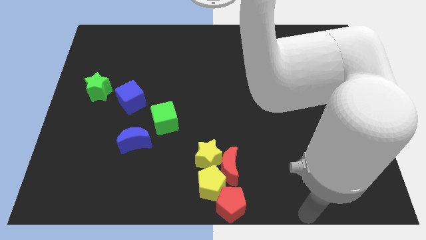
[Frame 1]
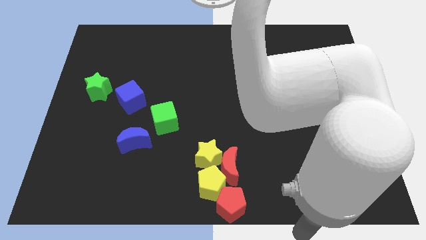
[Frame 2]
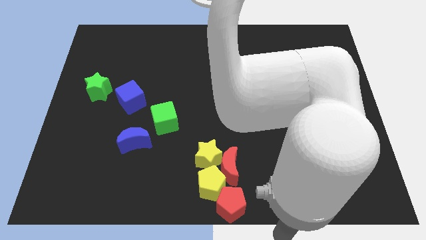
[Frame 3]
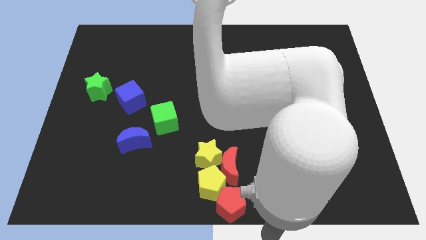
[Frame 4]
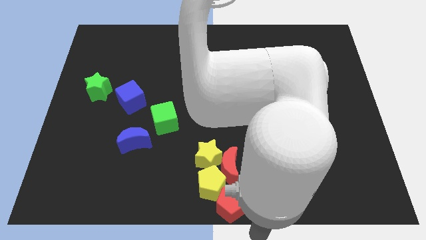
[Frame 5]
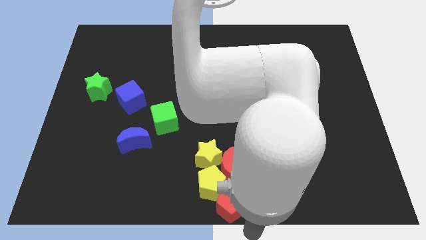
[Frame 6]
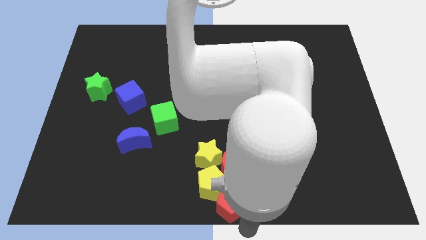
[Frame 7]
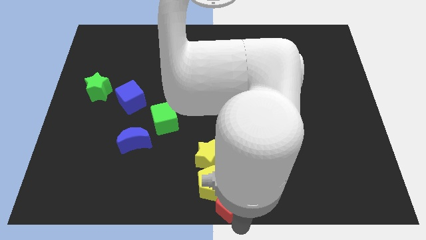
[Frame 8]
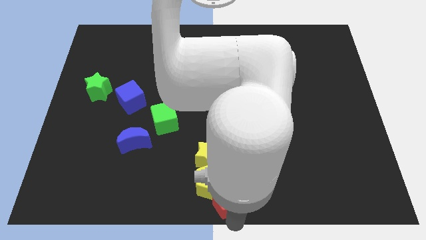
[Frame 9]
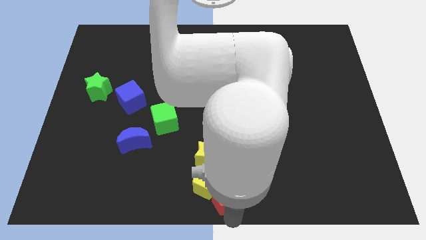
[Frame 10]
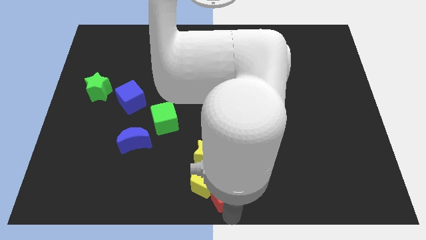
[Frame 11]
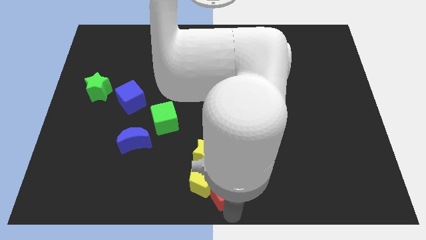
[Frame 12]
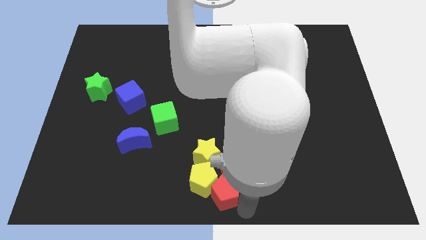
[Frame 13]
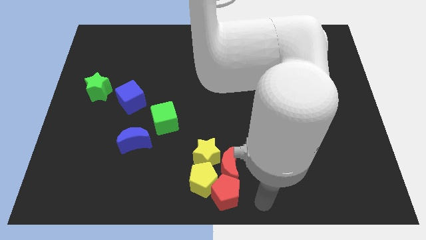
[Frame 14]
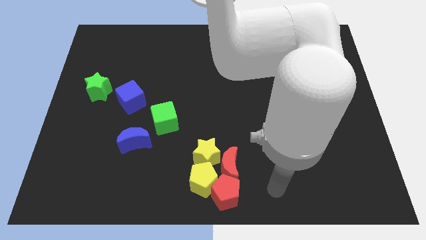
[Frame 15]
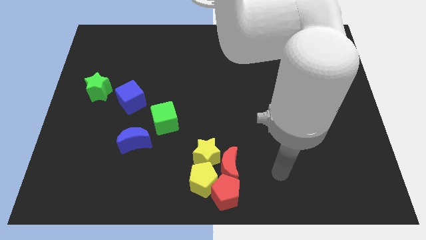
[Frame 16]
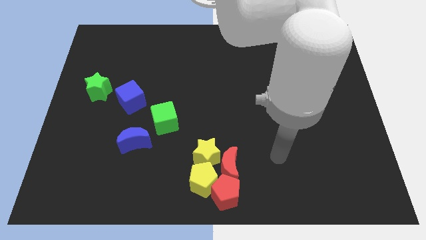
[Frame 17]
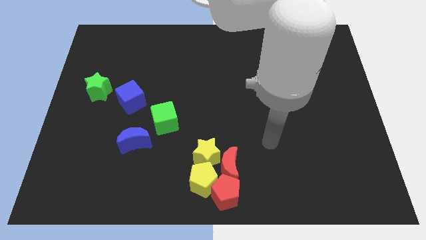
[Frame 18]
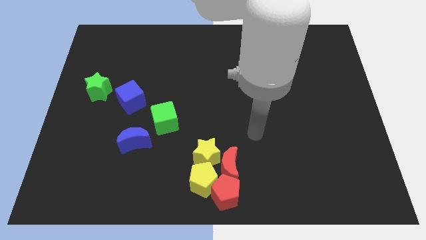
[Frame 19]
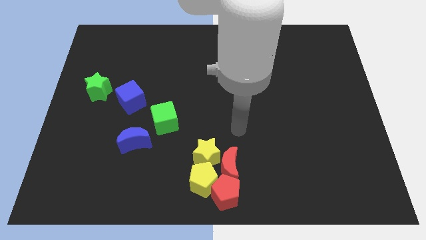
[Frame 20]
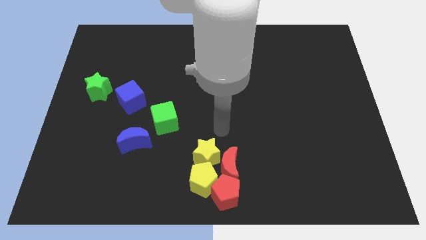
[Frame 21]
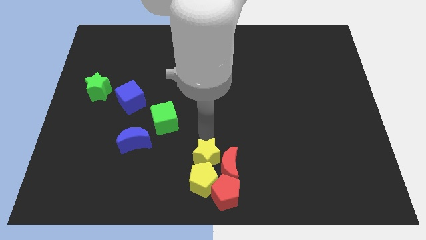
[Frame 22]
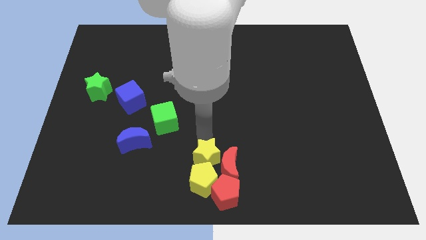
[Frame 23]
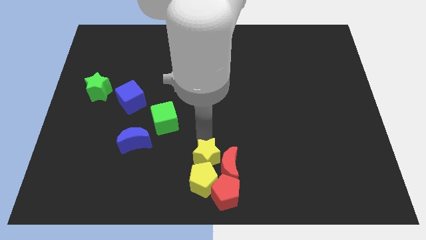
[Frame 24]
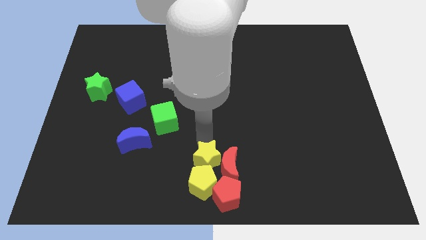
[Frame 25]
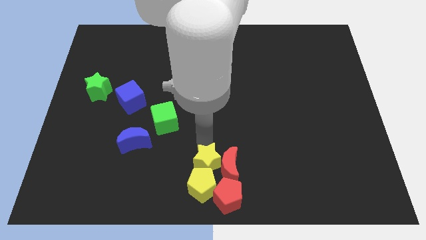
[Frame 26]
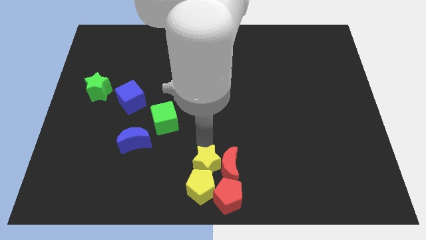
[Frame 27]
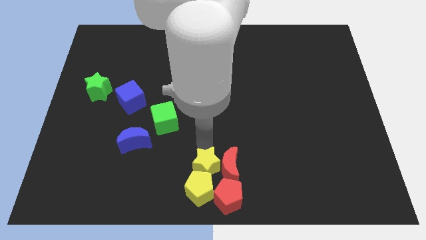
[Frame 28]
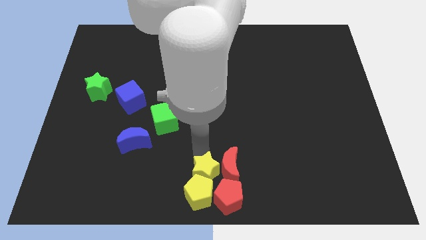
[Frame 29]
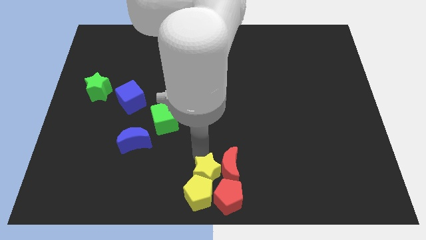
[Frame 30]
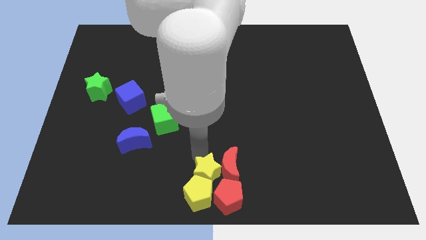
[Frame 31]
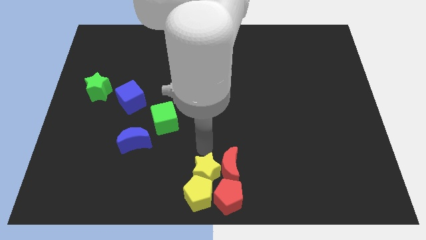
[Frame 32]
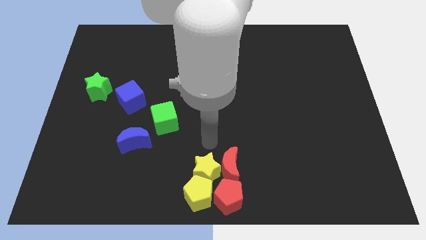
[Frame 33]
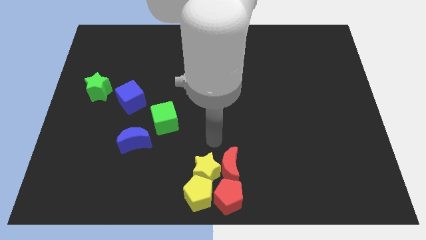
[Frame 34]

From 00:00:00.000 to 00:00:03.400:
move yellow star slightly downwards

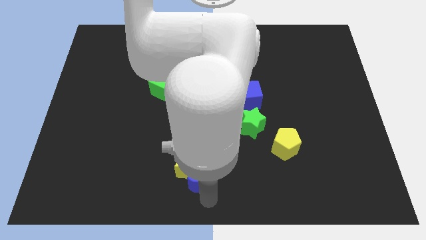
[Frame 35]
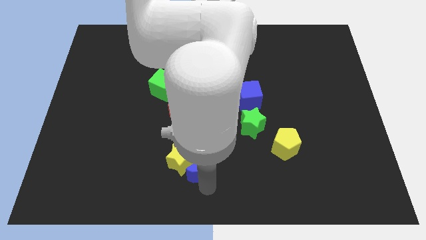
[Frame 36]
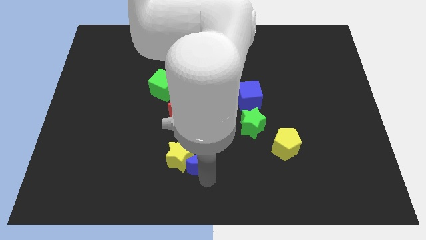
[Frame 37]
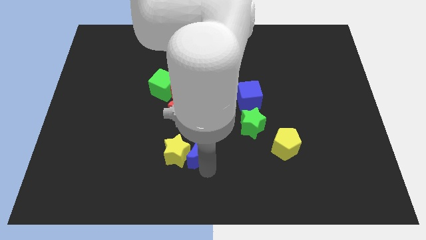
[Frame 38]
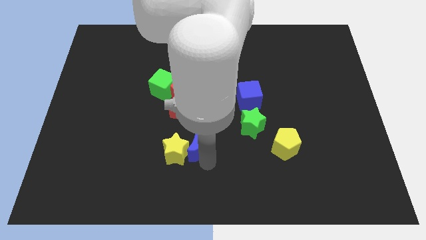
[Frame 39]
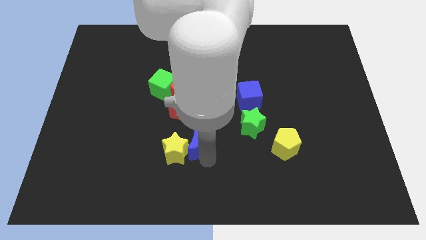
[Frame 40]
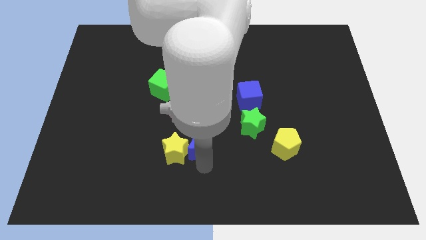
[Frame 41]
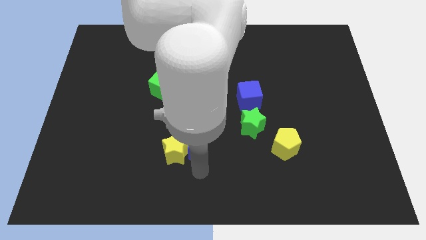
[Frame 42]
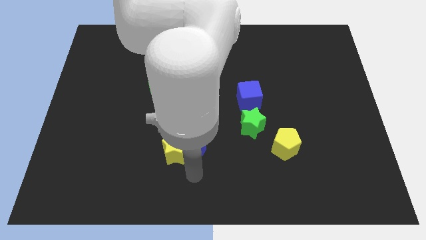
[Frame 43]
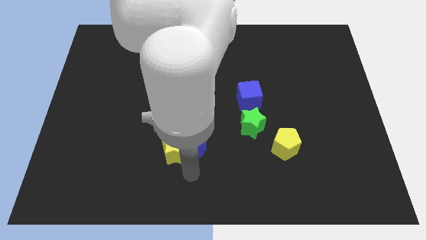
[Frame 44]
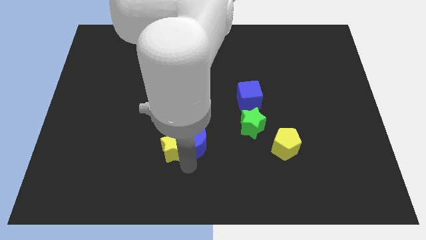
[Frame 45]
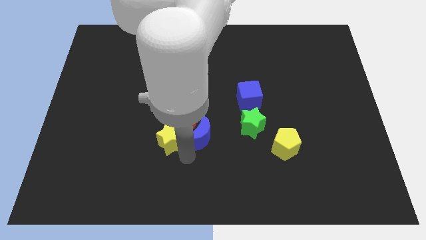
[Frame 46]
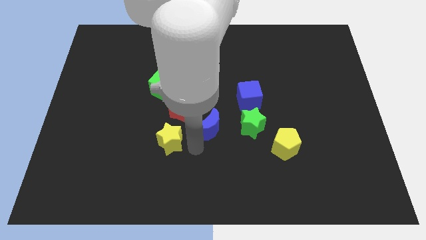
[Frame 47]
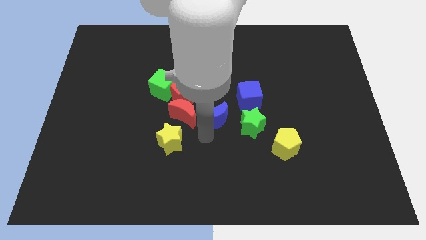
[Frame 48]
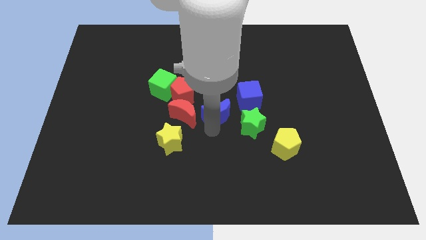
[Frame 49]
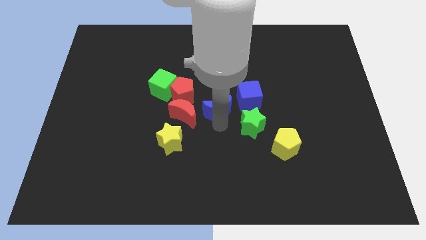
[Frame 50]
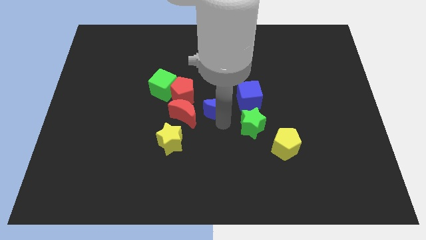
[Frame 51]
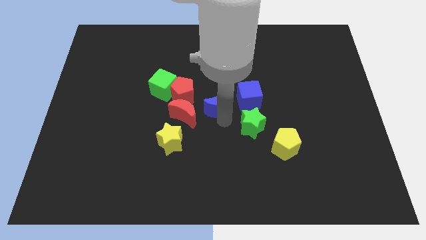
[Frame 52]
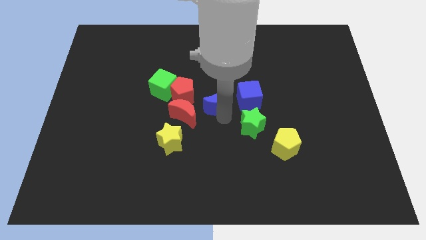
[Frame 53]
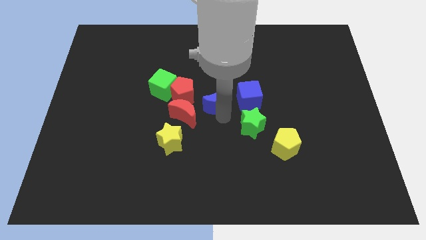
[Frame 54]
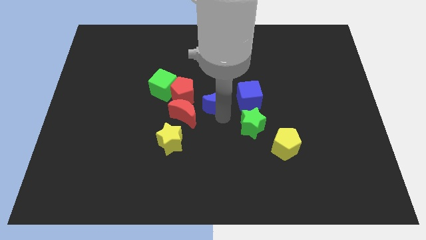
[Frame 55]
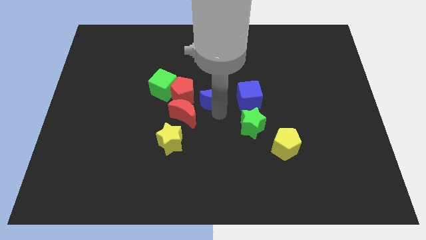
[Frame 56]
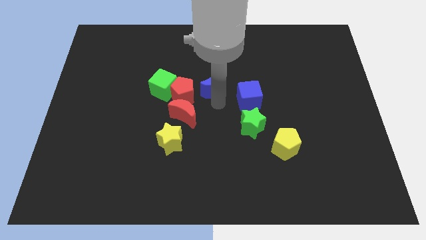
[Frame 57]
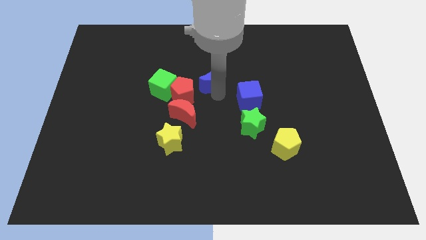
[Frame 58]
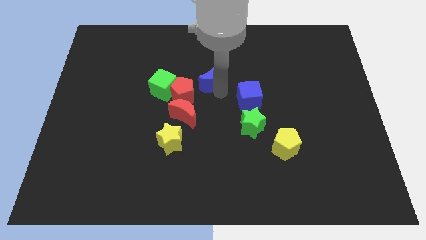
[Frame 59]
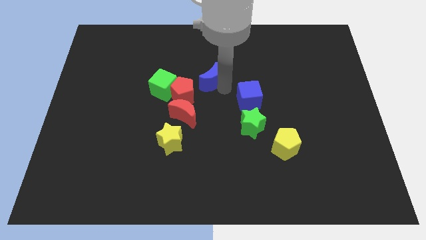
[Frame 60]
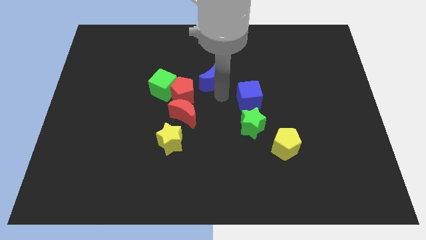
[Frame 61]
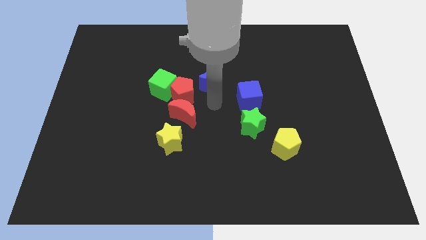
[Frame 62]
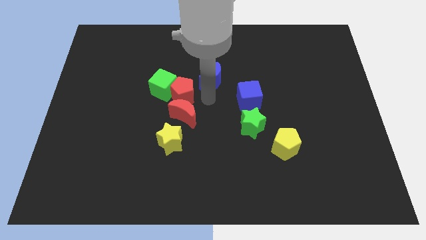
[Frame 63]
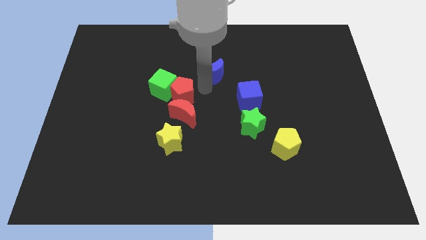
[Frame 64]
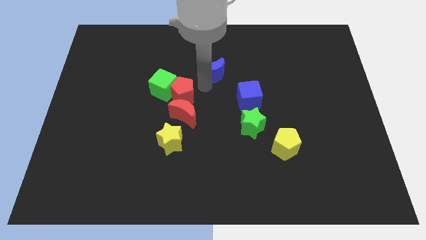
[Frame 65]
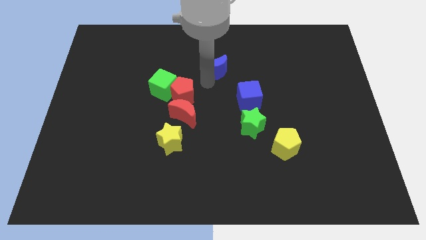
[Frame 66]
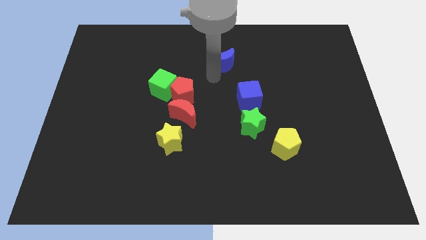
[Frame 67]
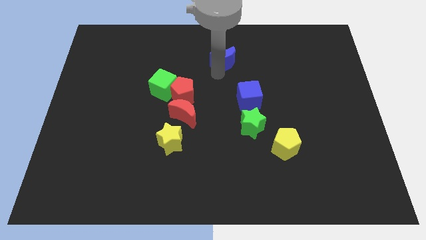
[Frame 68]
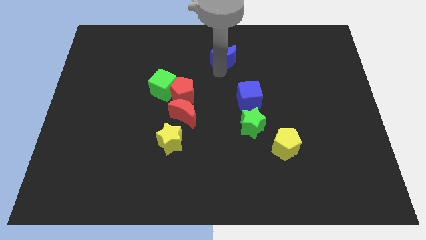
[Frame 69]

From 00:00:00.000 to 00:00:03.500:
move the blue crescent towards the top

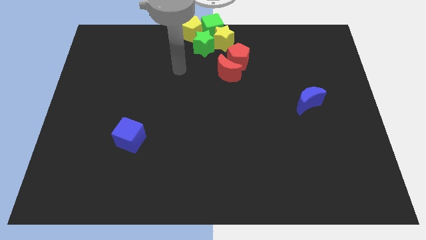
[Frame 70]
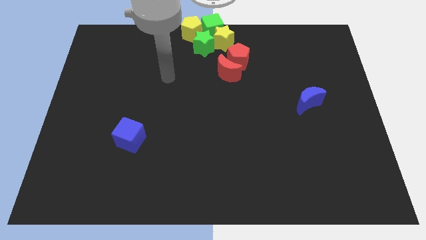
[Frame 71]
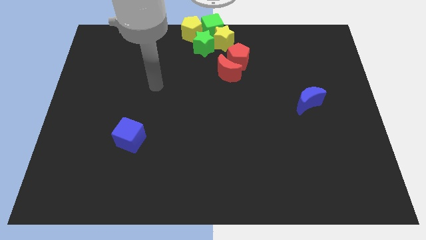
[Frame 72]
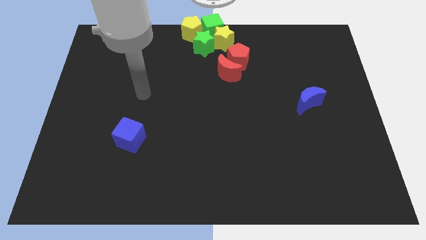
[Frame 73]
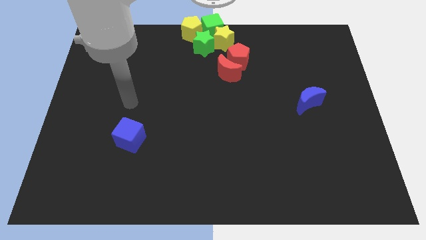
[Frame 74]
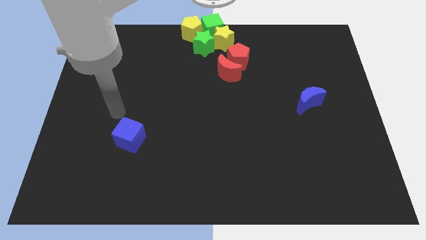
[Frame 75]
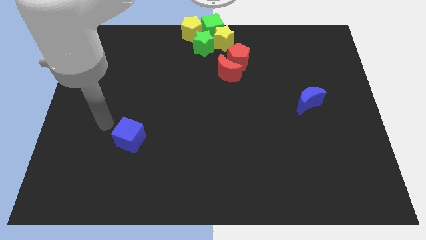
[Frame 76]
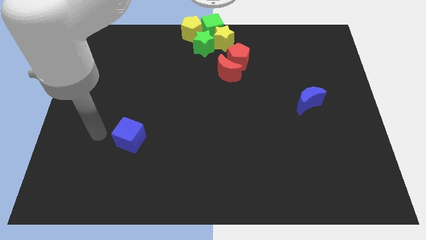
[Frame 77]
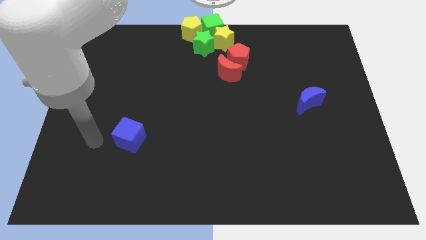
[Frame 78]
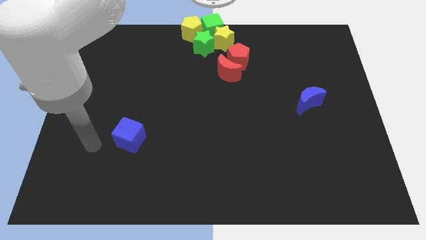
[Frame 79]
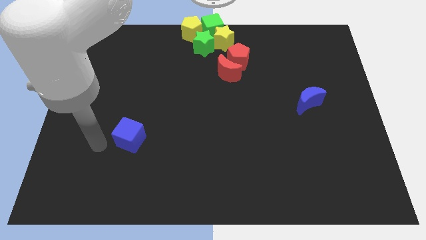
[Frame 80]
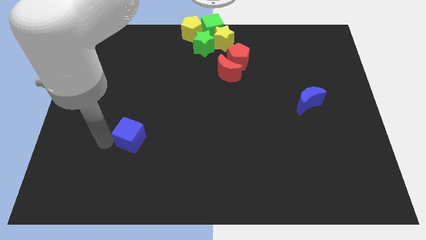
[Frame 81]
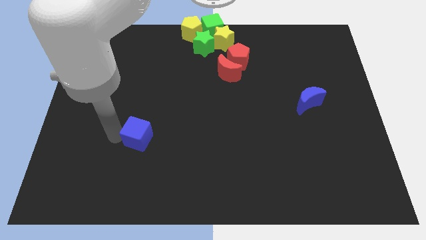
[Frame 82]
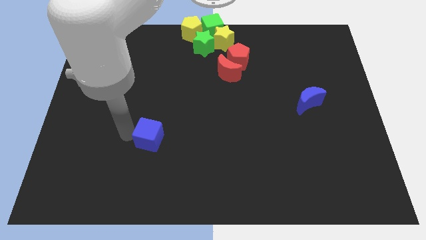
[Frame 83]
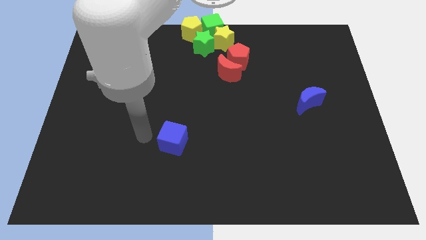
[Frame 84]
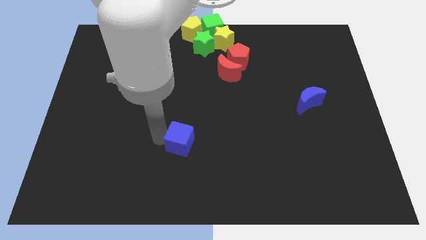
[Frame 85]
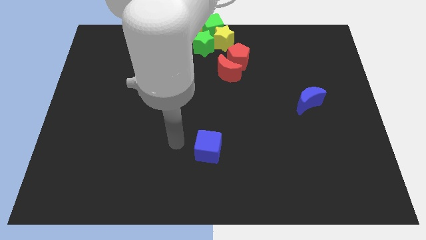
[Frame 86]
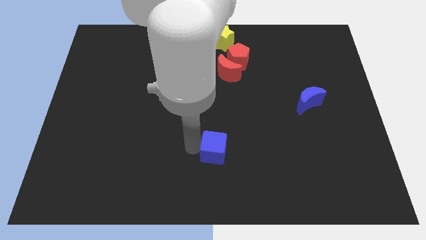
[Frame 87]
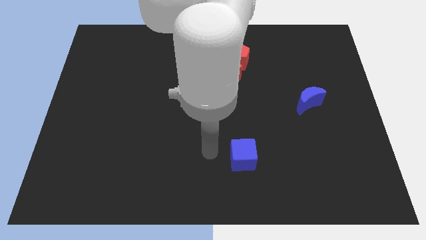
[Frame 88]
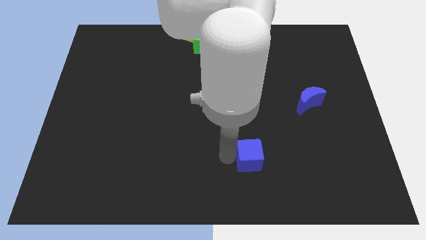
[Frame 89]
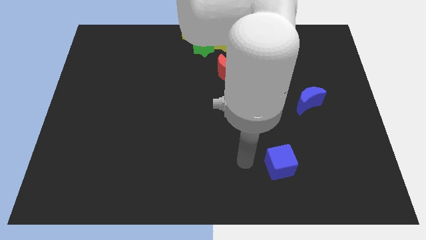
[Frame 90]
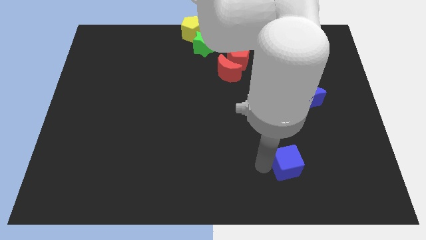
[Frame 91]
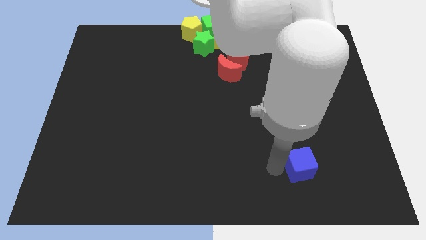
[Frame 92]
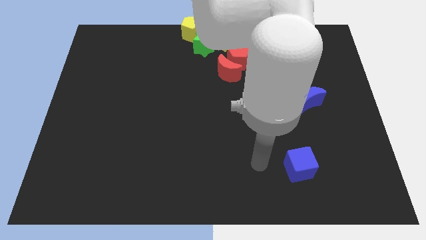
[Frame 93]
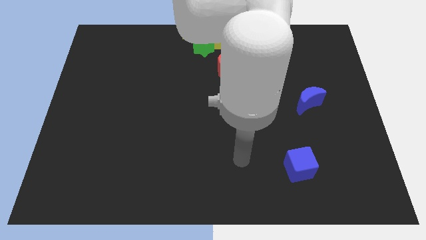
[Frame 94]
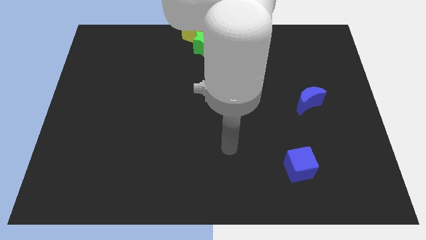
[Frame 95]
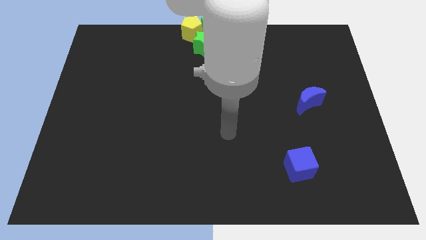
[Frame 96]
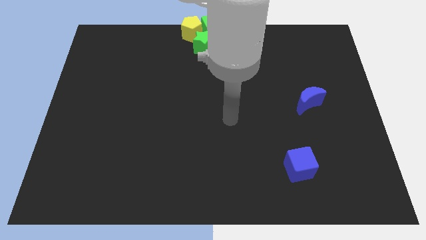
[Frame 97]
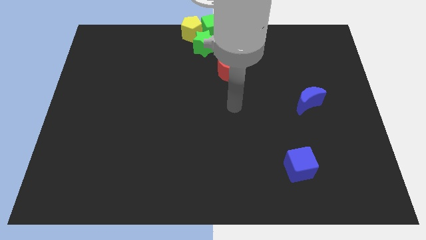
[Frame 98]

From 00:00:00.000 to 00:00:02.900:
move the blue cube to the bottom right of the board
